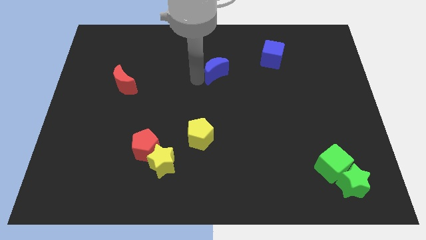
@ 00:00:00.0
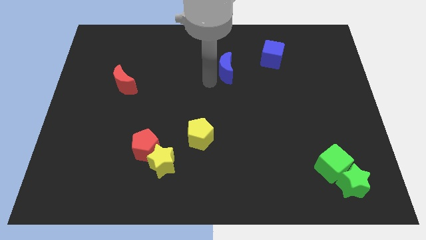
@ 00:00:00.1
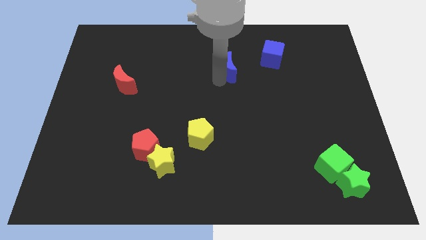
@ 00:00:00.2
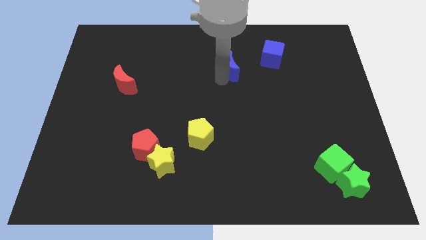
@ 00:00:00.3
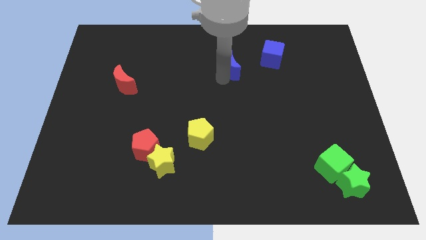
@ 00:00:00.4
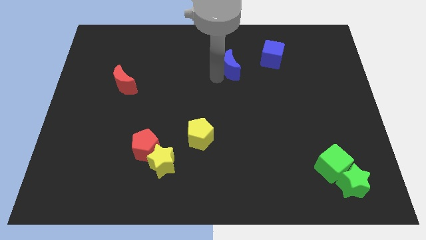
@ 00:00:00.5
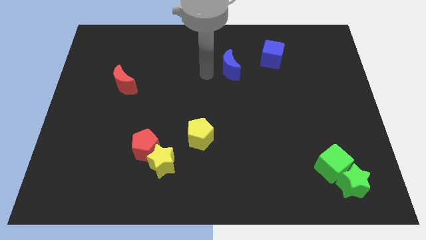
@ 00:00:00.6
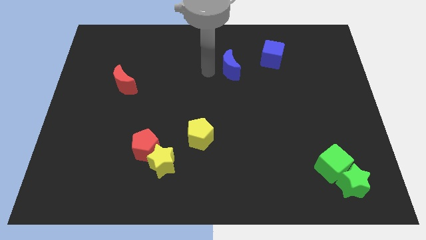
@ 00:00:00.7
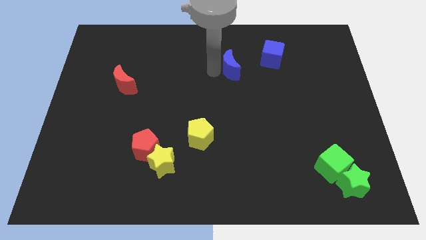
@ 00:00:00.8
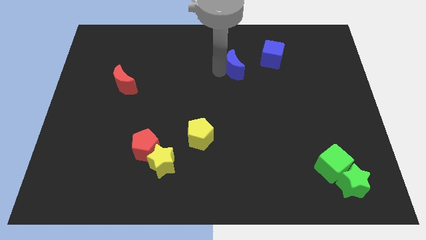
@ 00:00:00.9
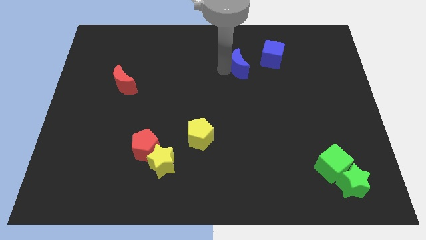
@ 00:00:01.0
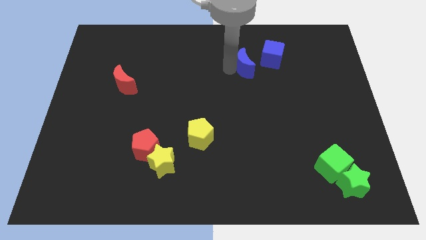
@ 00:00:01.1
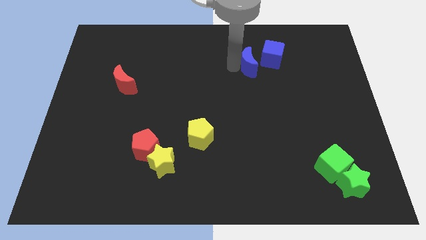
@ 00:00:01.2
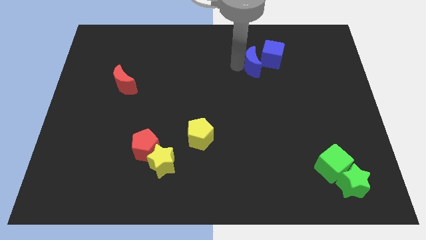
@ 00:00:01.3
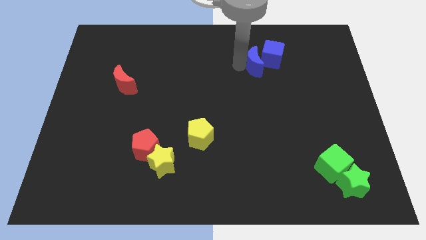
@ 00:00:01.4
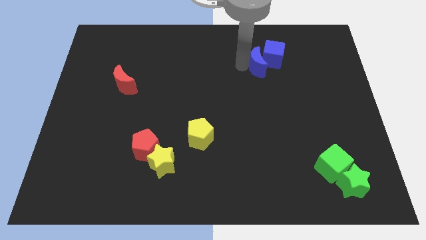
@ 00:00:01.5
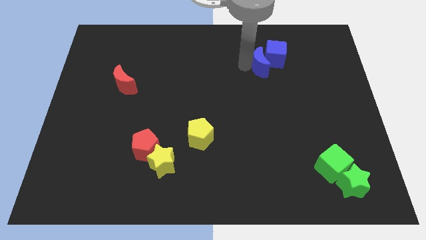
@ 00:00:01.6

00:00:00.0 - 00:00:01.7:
attach the blue moon to the blue cube

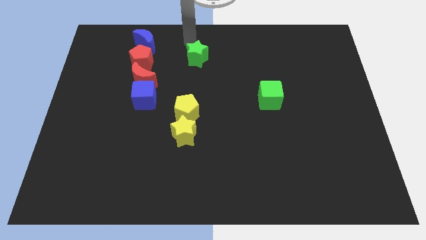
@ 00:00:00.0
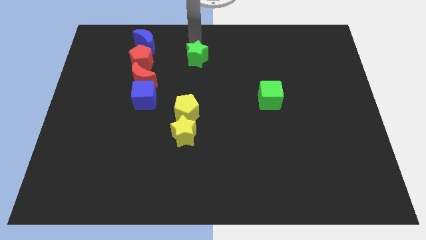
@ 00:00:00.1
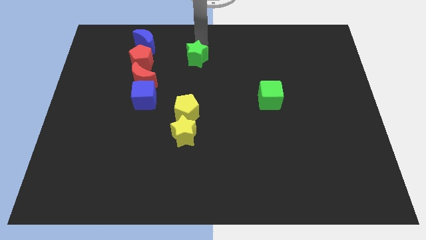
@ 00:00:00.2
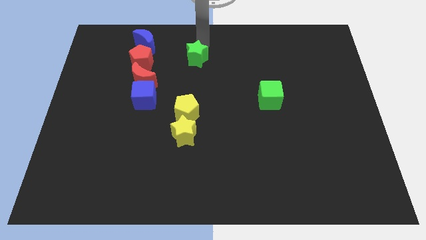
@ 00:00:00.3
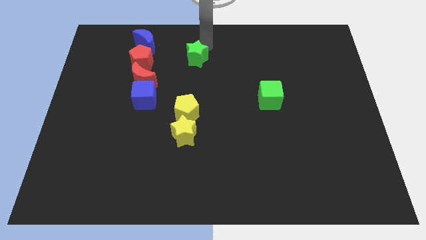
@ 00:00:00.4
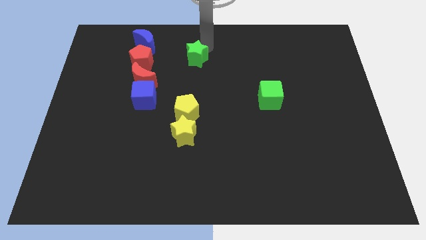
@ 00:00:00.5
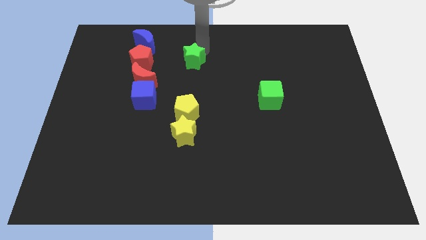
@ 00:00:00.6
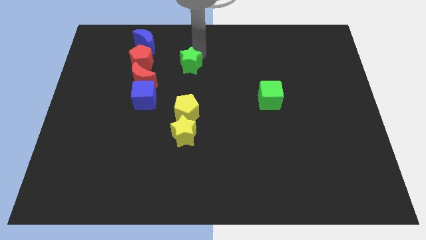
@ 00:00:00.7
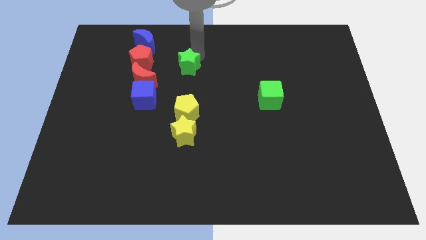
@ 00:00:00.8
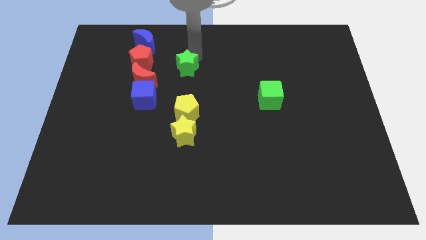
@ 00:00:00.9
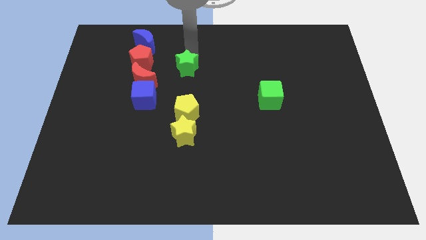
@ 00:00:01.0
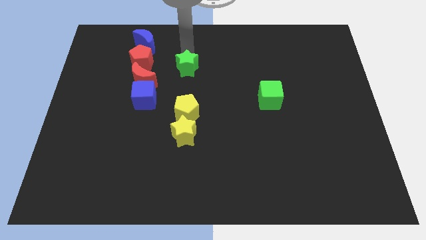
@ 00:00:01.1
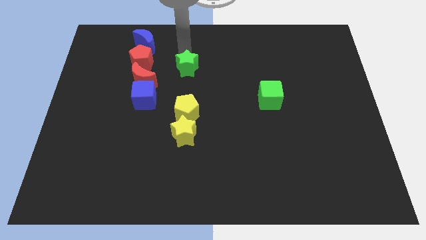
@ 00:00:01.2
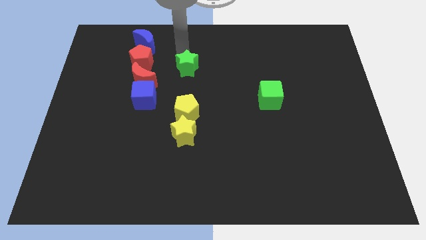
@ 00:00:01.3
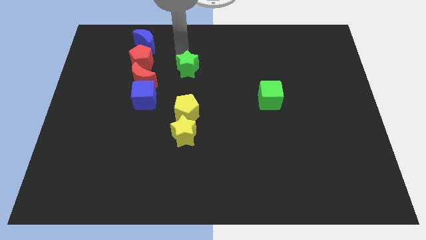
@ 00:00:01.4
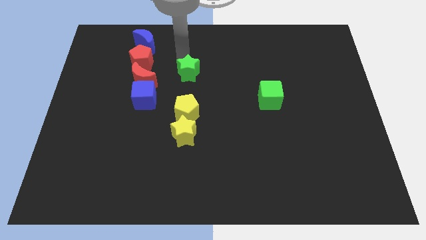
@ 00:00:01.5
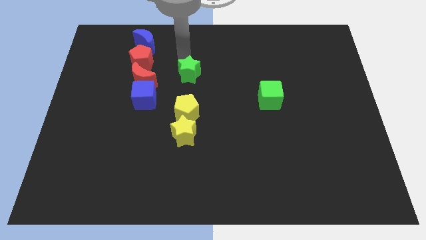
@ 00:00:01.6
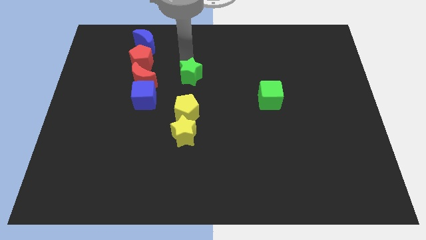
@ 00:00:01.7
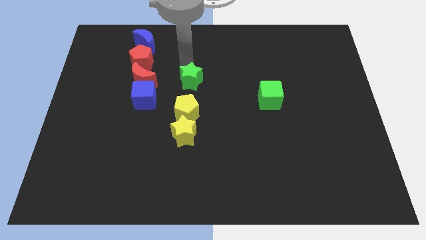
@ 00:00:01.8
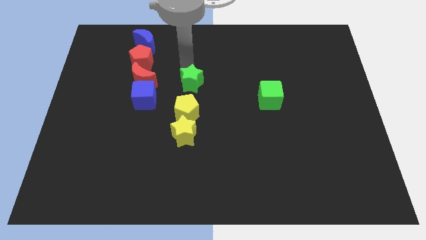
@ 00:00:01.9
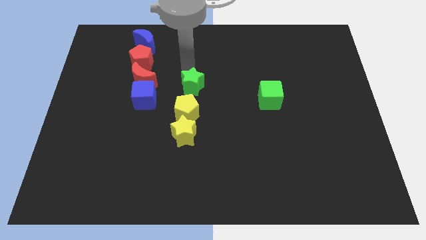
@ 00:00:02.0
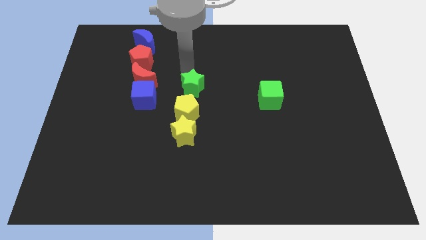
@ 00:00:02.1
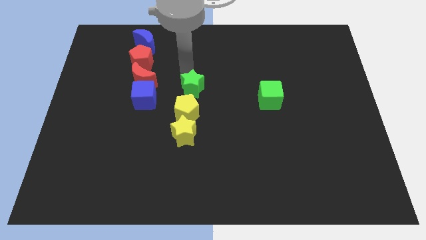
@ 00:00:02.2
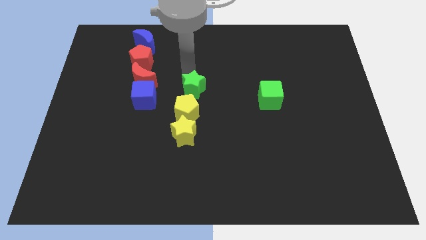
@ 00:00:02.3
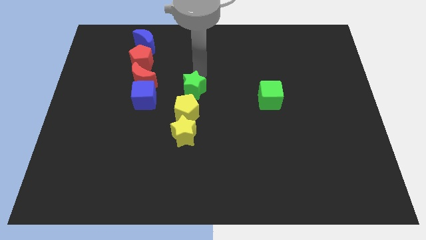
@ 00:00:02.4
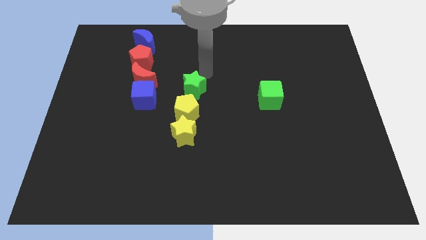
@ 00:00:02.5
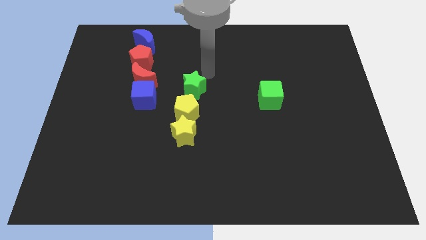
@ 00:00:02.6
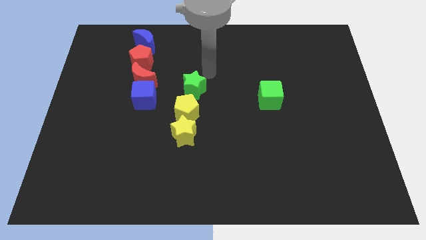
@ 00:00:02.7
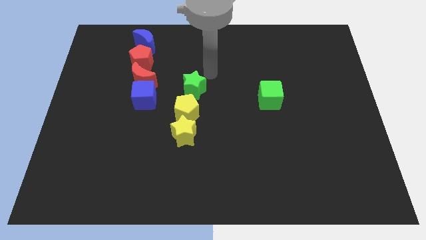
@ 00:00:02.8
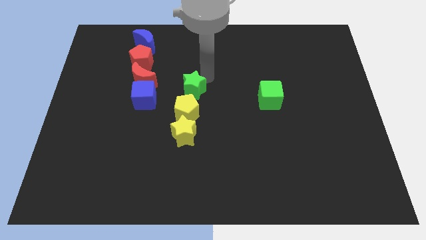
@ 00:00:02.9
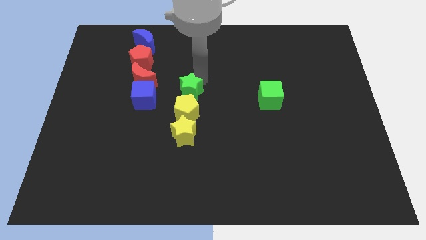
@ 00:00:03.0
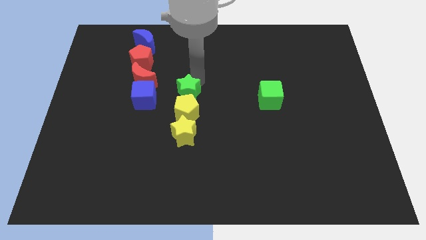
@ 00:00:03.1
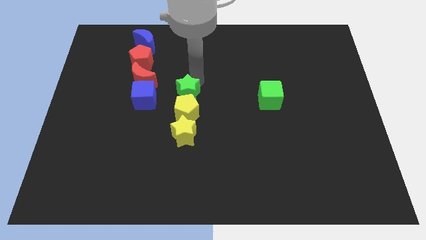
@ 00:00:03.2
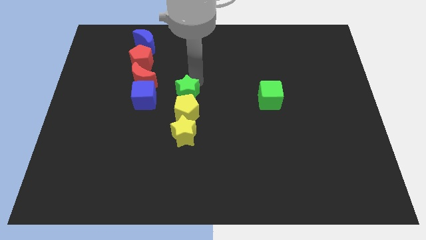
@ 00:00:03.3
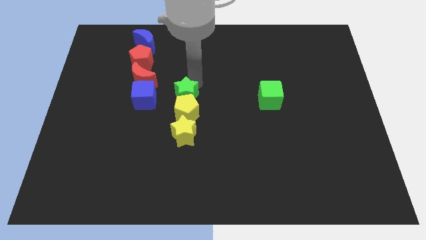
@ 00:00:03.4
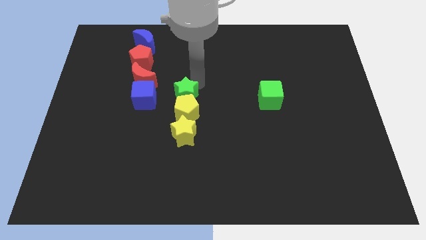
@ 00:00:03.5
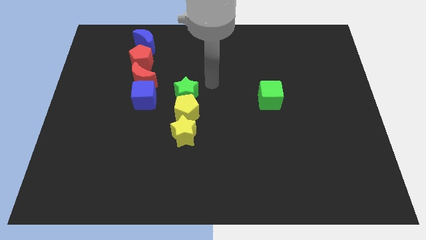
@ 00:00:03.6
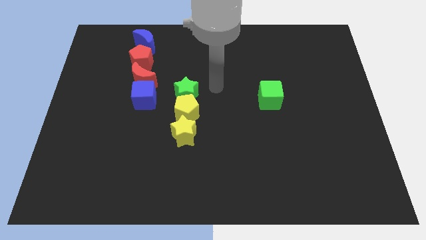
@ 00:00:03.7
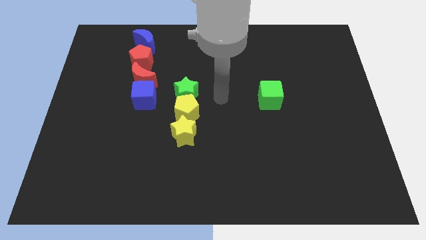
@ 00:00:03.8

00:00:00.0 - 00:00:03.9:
push the green star above the yellow pentagon

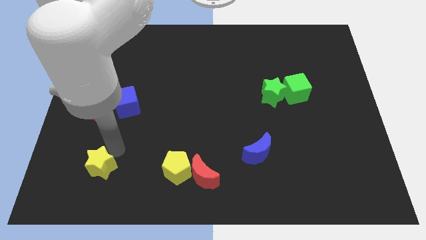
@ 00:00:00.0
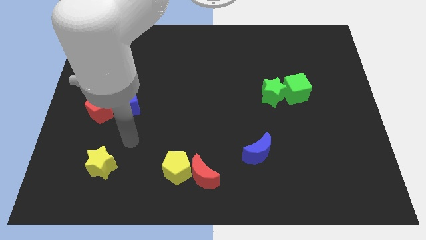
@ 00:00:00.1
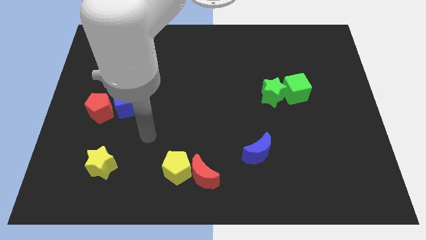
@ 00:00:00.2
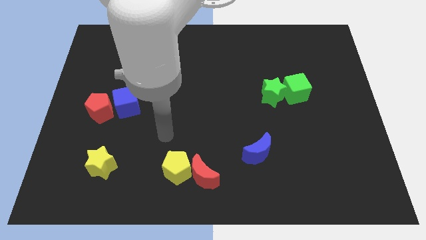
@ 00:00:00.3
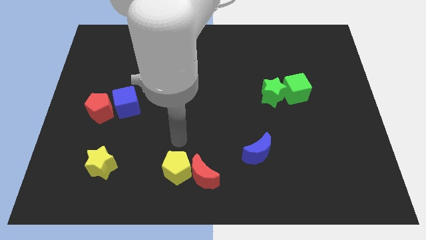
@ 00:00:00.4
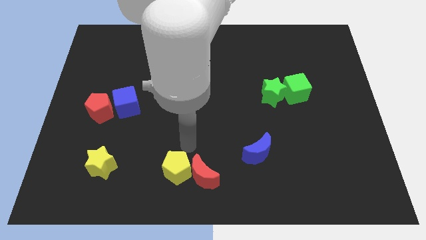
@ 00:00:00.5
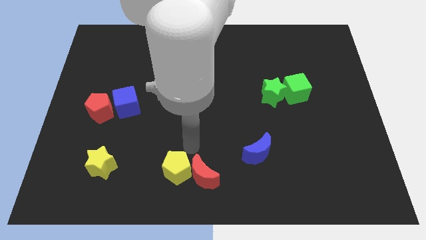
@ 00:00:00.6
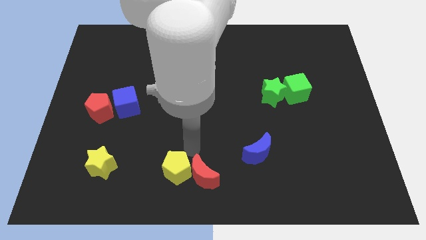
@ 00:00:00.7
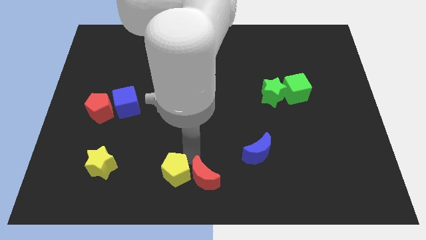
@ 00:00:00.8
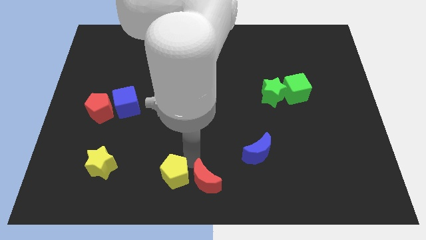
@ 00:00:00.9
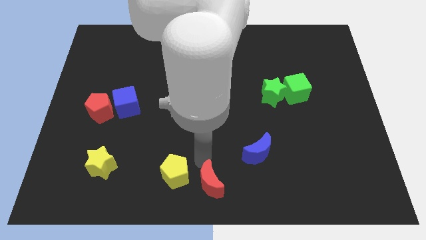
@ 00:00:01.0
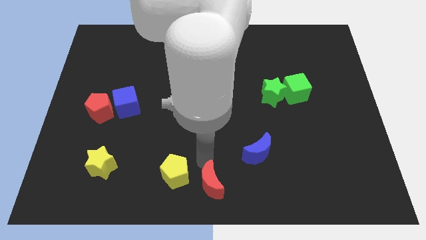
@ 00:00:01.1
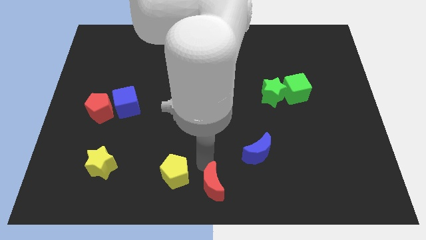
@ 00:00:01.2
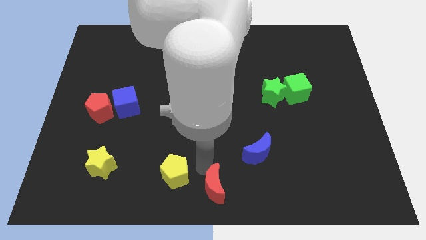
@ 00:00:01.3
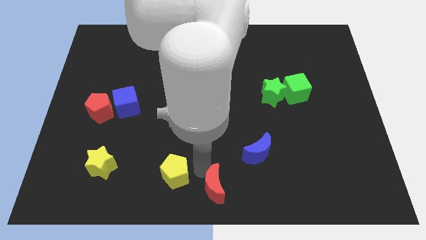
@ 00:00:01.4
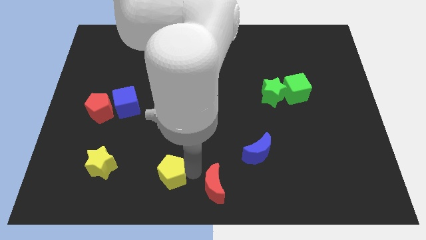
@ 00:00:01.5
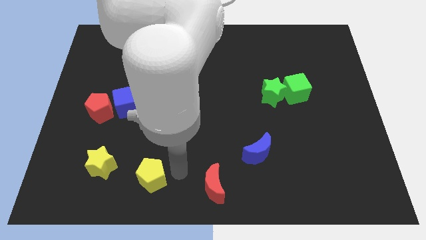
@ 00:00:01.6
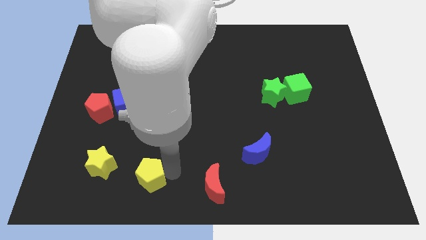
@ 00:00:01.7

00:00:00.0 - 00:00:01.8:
seperate the yellow pentagon and red moon

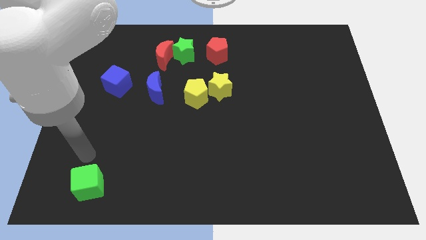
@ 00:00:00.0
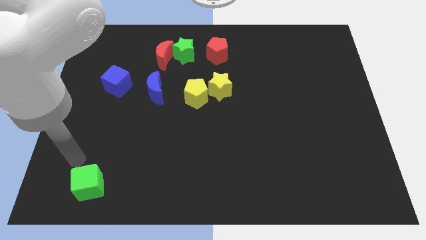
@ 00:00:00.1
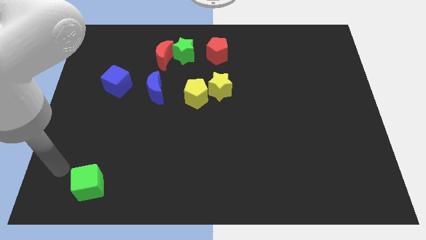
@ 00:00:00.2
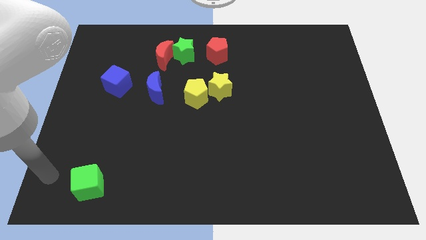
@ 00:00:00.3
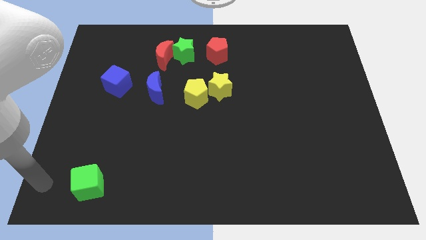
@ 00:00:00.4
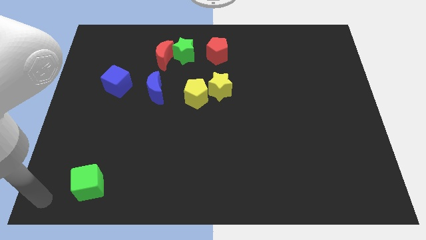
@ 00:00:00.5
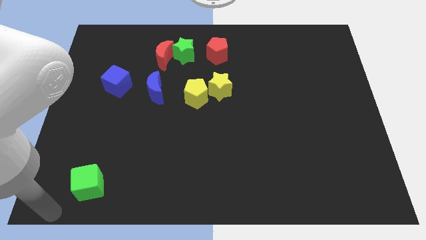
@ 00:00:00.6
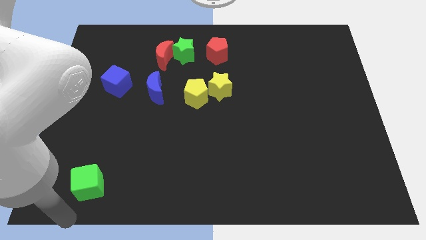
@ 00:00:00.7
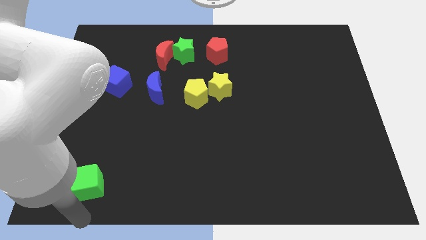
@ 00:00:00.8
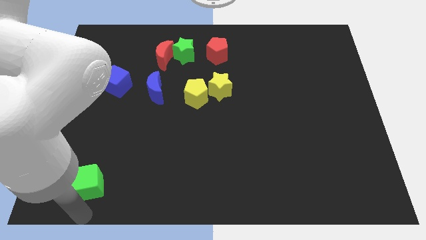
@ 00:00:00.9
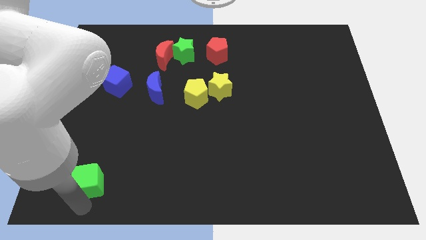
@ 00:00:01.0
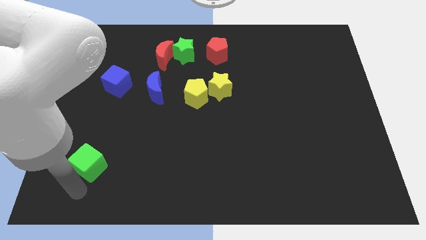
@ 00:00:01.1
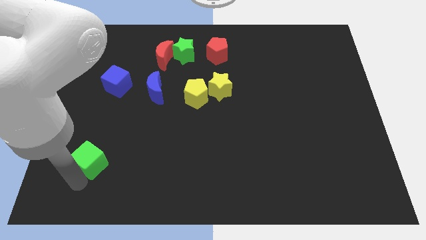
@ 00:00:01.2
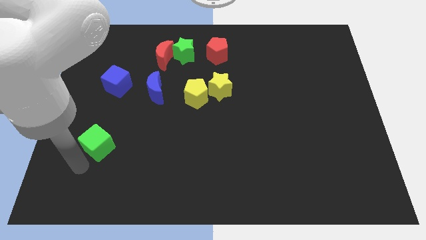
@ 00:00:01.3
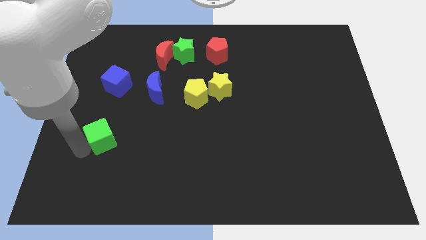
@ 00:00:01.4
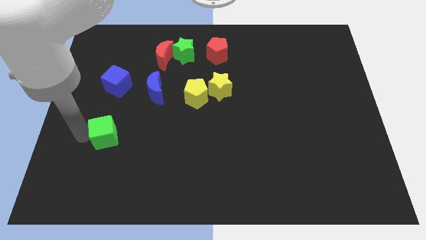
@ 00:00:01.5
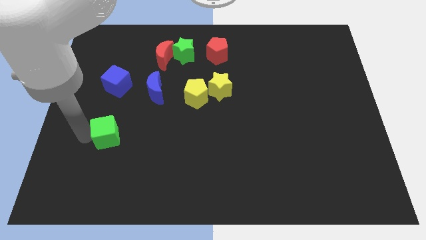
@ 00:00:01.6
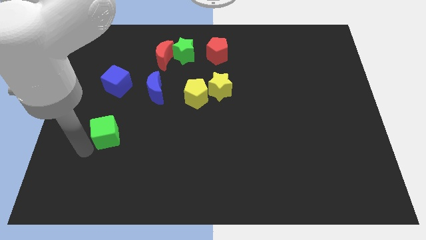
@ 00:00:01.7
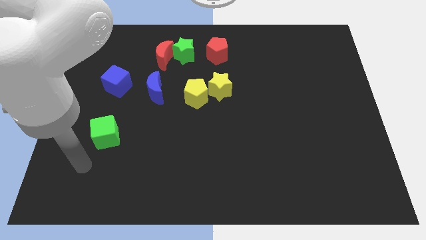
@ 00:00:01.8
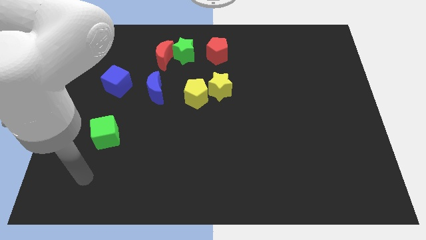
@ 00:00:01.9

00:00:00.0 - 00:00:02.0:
drag the green cube towards the blue cube
